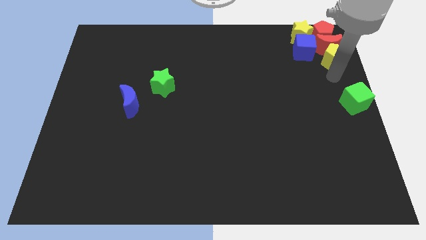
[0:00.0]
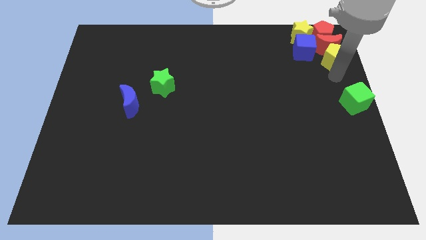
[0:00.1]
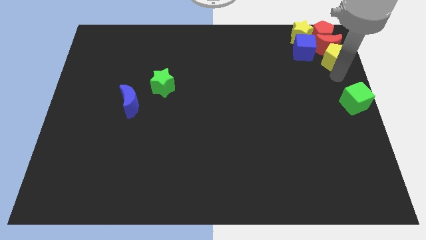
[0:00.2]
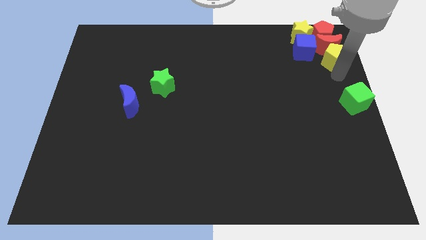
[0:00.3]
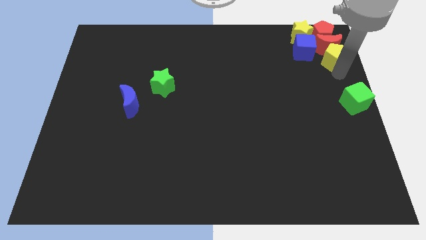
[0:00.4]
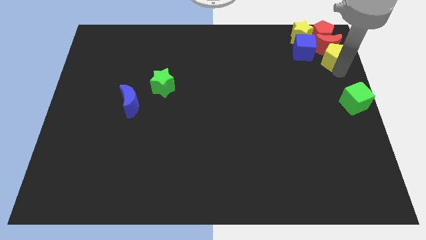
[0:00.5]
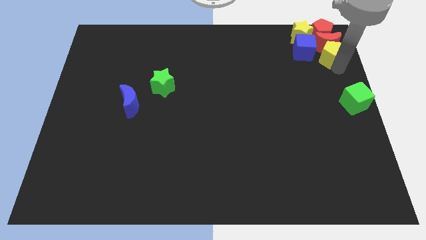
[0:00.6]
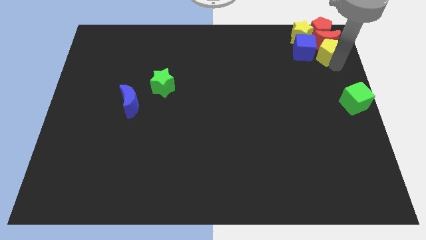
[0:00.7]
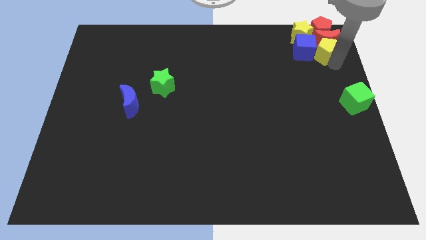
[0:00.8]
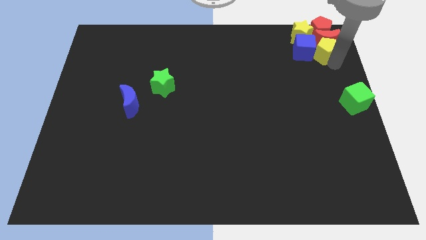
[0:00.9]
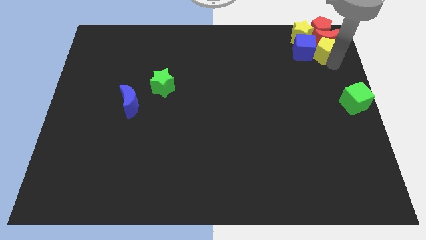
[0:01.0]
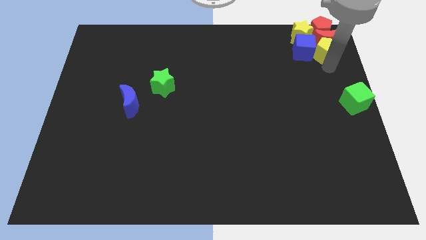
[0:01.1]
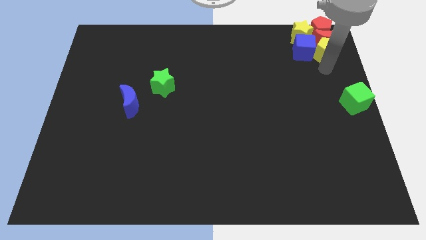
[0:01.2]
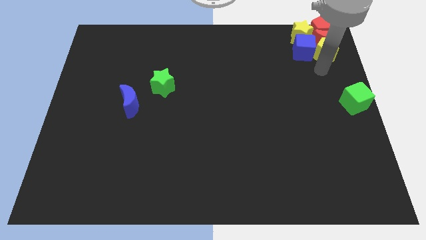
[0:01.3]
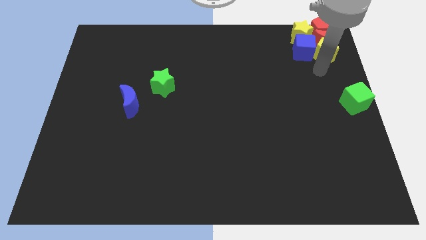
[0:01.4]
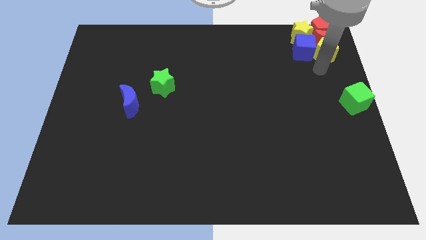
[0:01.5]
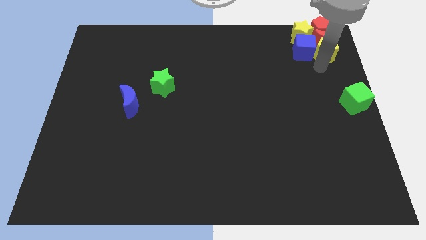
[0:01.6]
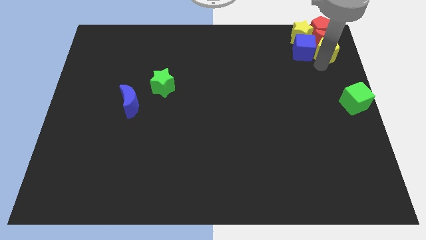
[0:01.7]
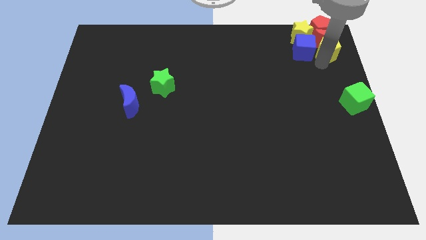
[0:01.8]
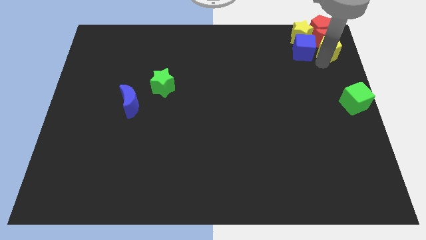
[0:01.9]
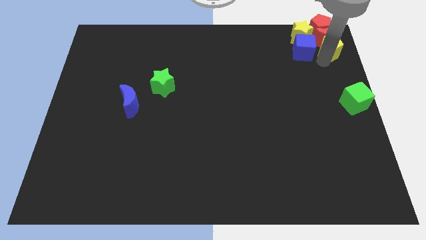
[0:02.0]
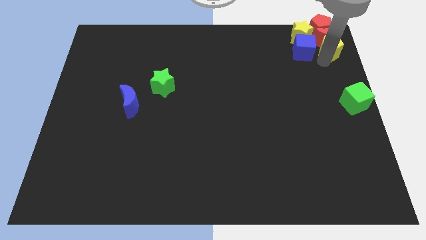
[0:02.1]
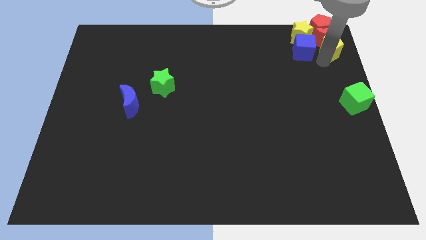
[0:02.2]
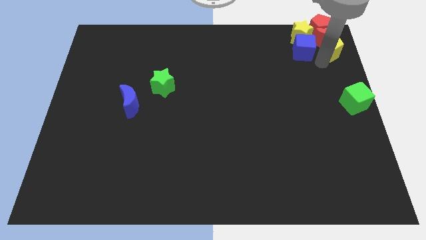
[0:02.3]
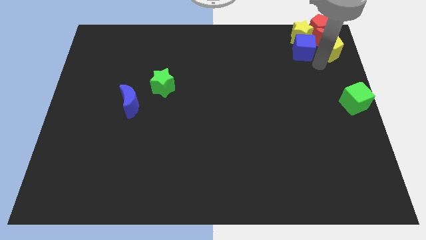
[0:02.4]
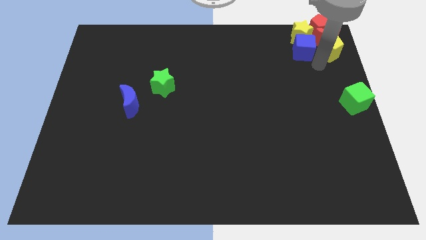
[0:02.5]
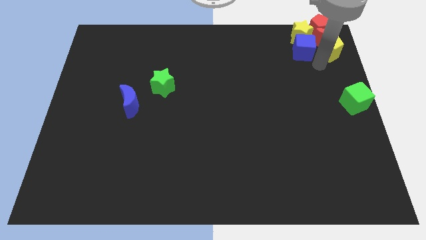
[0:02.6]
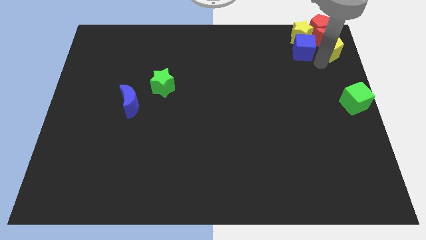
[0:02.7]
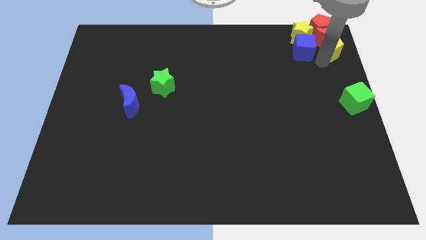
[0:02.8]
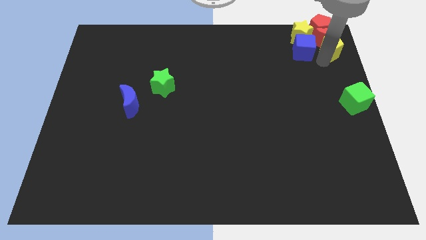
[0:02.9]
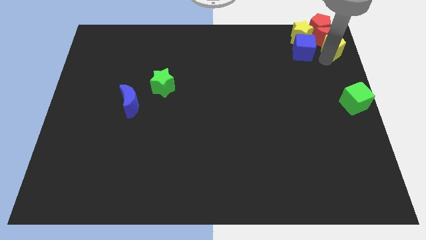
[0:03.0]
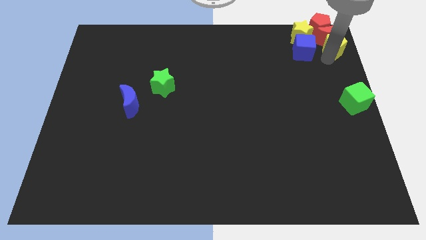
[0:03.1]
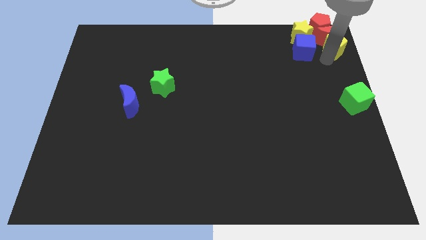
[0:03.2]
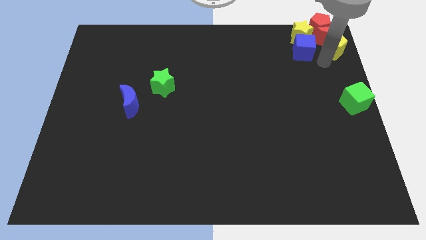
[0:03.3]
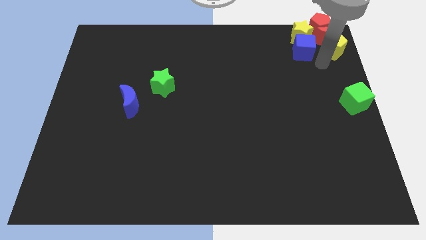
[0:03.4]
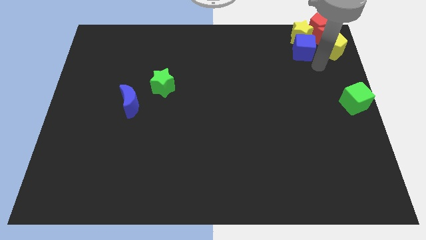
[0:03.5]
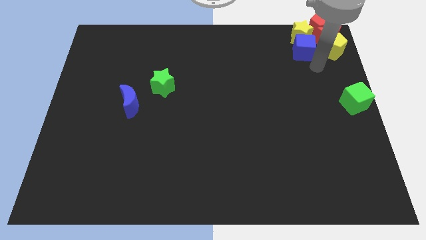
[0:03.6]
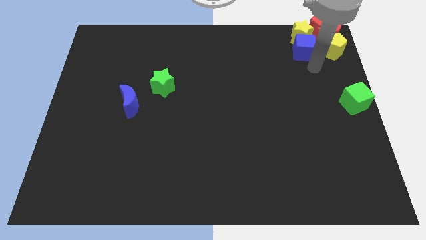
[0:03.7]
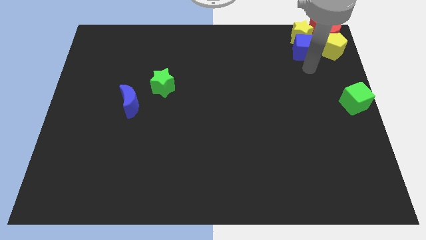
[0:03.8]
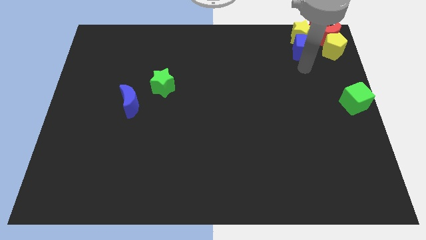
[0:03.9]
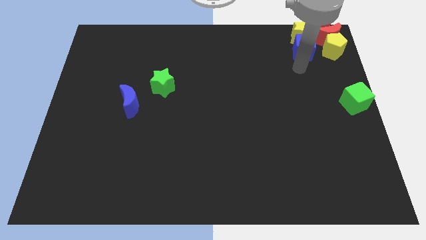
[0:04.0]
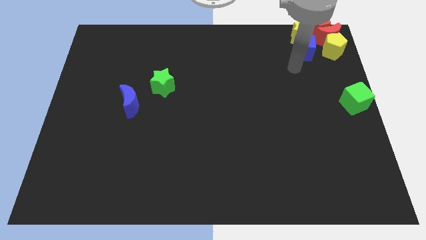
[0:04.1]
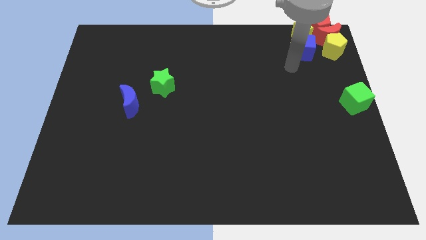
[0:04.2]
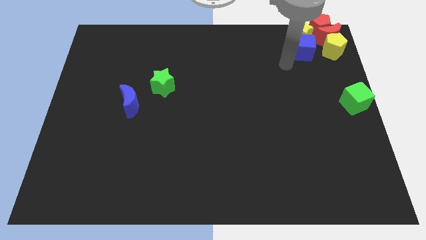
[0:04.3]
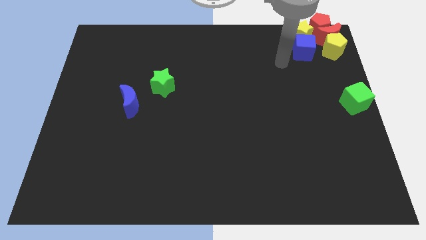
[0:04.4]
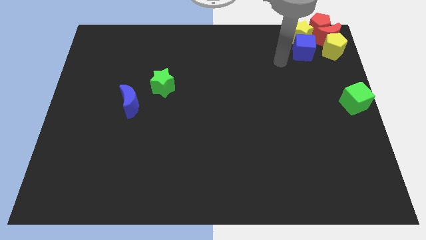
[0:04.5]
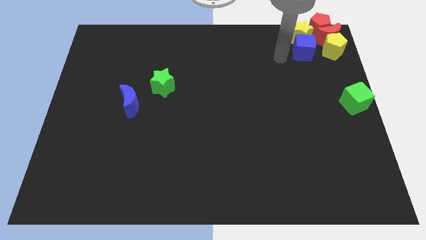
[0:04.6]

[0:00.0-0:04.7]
push the yellow pentagon into the red crescent

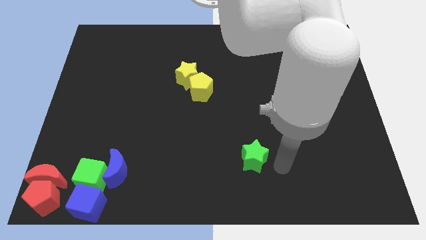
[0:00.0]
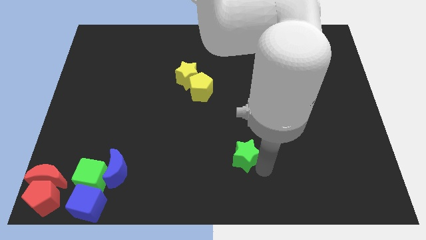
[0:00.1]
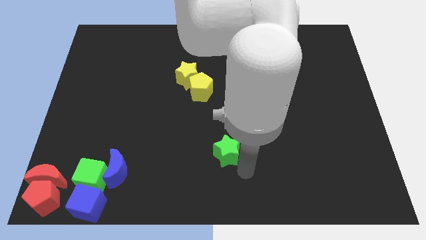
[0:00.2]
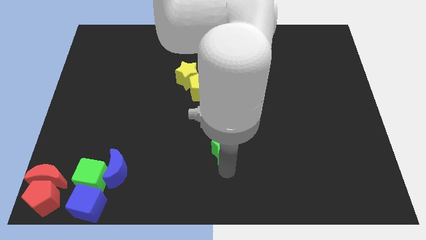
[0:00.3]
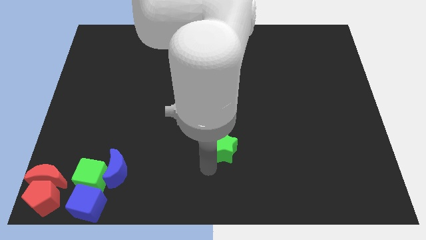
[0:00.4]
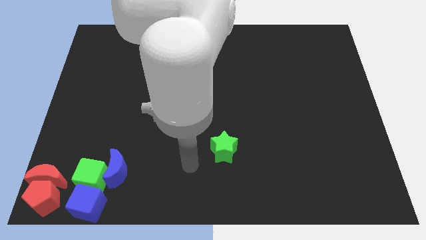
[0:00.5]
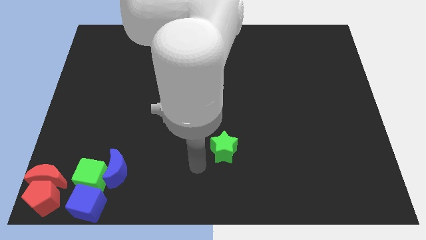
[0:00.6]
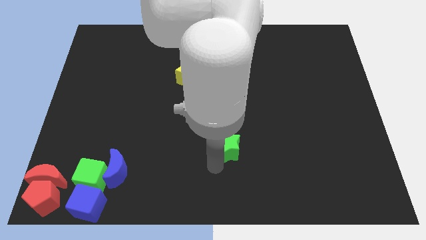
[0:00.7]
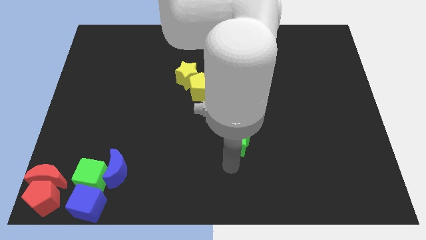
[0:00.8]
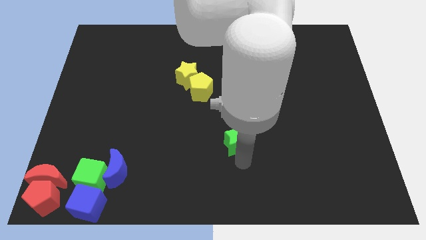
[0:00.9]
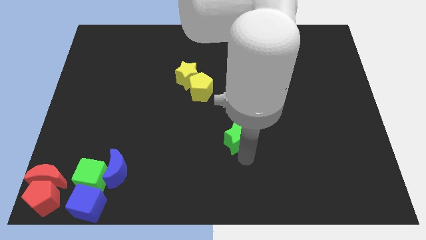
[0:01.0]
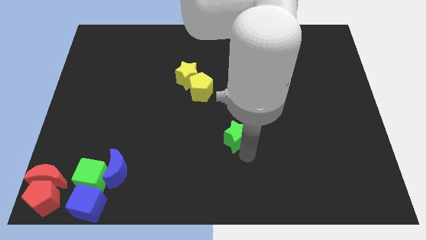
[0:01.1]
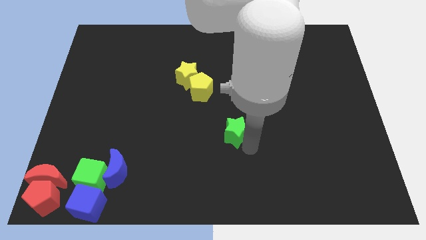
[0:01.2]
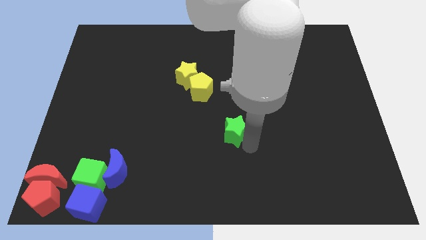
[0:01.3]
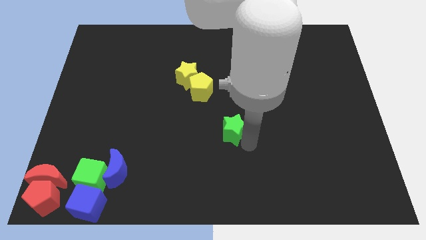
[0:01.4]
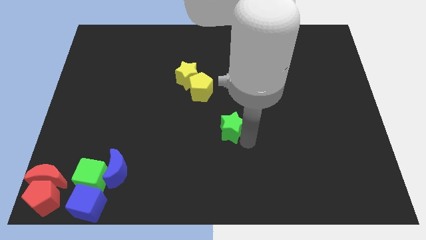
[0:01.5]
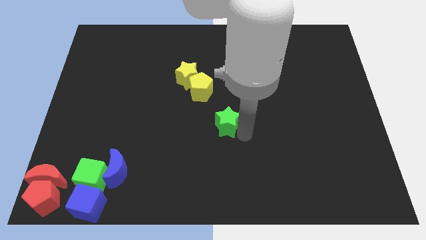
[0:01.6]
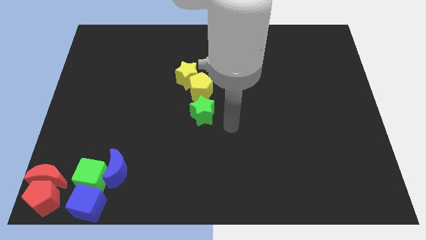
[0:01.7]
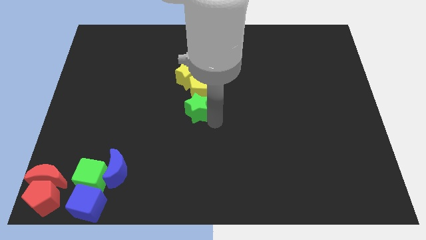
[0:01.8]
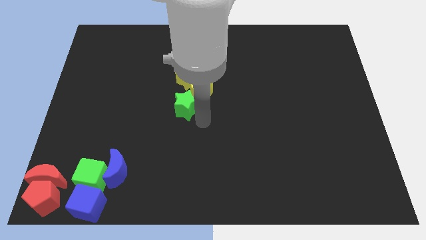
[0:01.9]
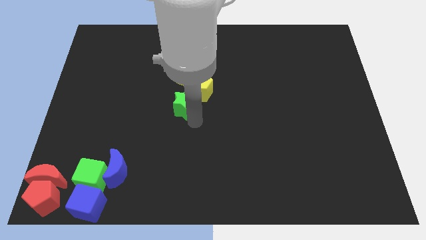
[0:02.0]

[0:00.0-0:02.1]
push green star towards yellow pentagon

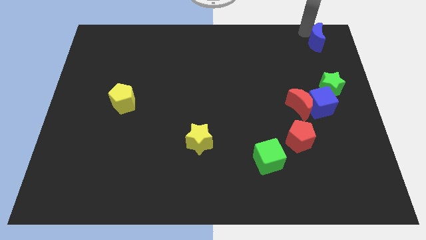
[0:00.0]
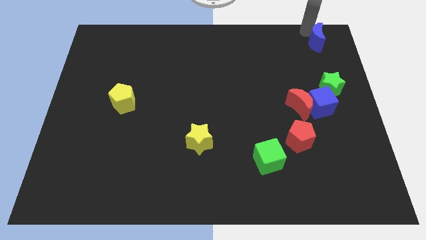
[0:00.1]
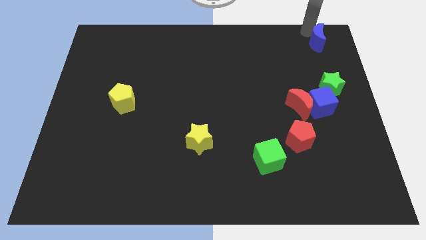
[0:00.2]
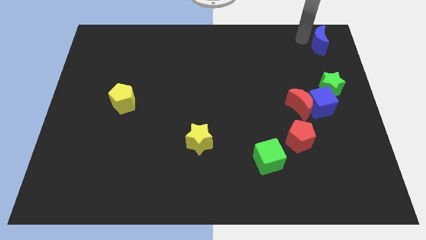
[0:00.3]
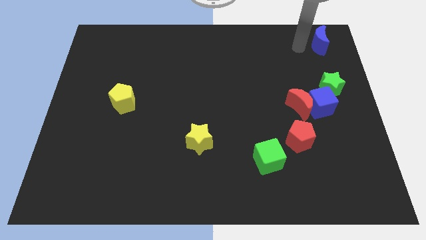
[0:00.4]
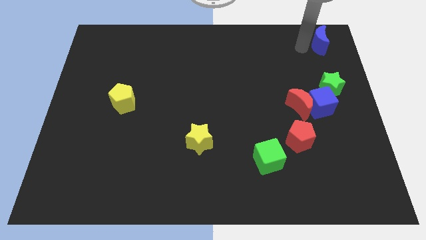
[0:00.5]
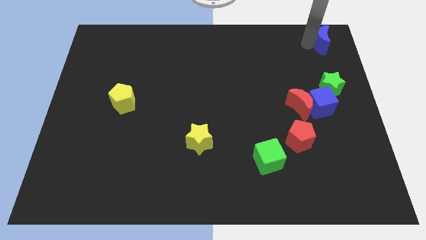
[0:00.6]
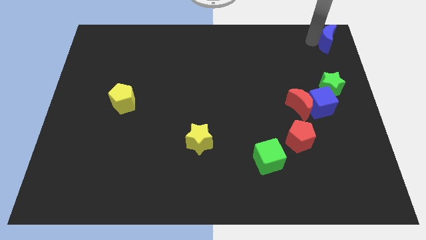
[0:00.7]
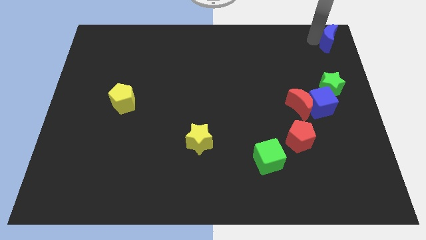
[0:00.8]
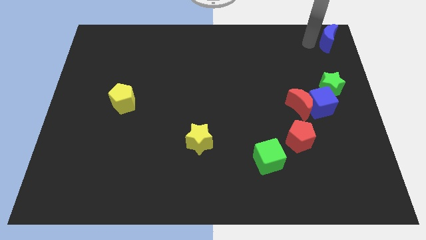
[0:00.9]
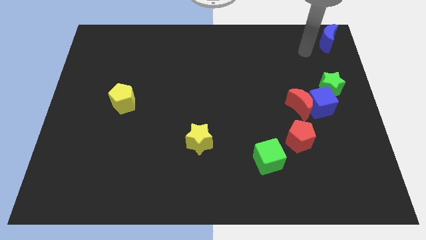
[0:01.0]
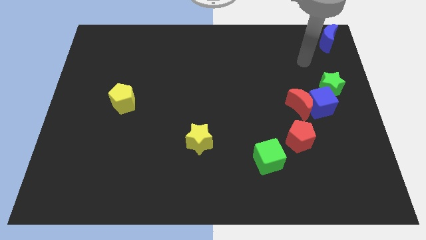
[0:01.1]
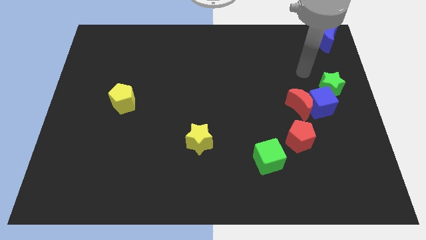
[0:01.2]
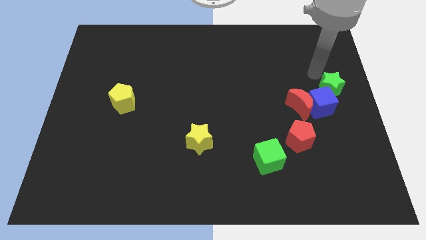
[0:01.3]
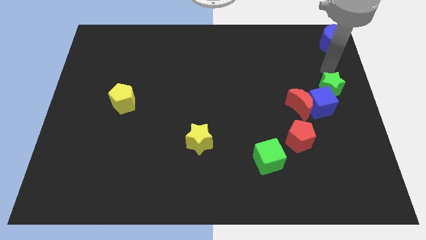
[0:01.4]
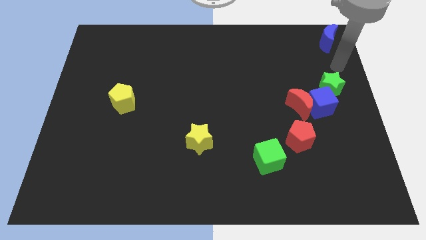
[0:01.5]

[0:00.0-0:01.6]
move the blue crescent to the top right corner of the board

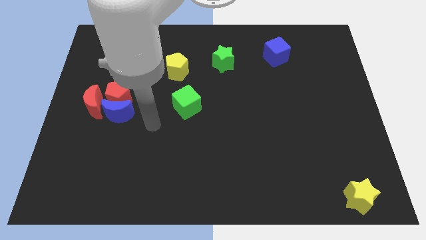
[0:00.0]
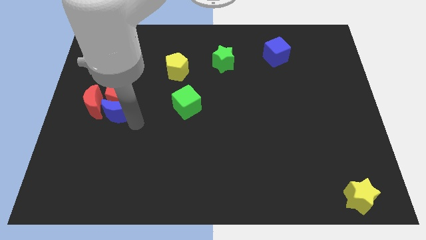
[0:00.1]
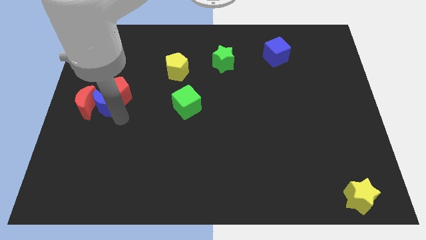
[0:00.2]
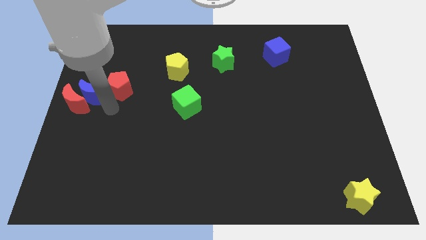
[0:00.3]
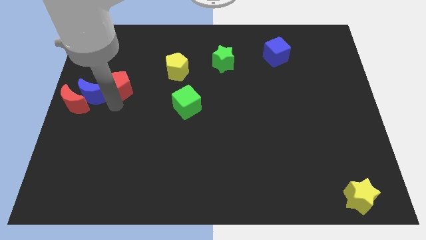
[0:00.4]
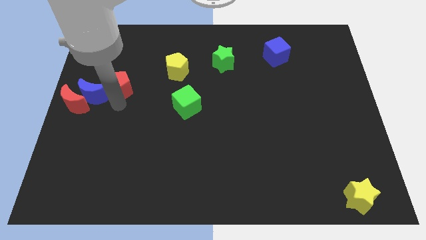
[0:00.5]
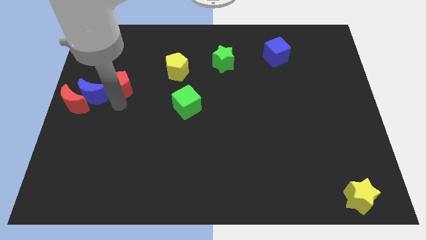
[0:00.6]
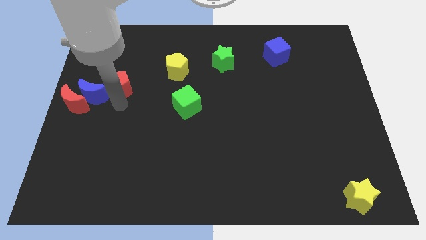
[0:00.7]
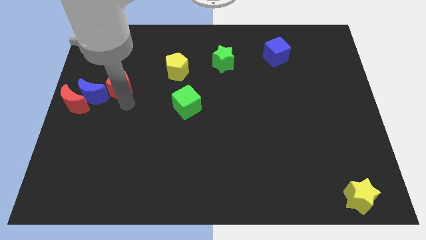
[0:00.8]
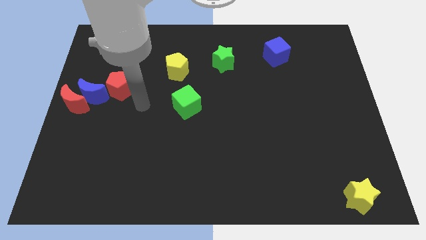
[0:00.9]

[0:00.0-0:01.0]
place the blue crescent in between the red crescent and red pentagon
